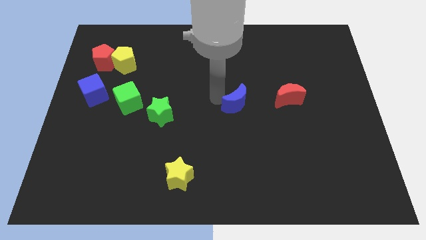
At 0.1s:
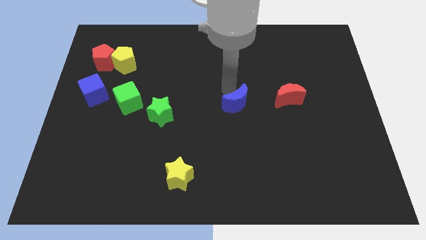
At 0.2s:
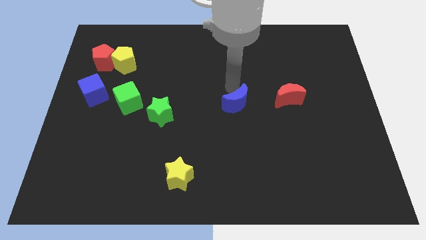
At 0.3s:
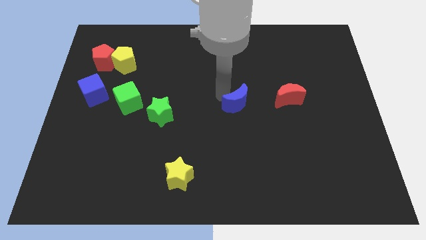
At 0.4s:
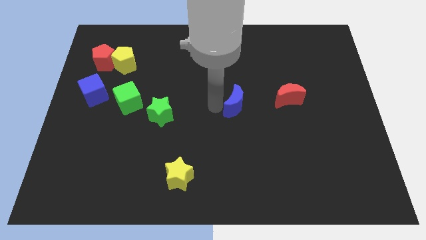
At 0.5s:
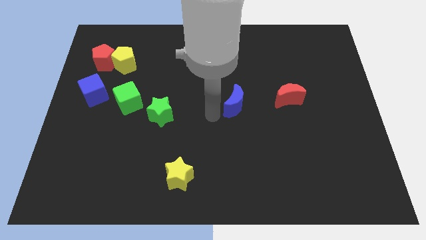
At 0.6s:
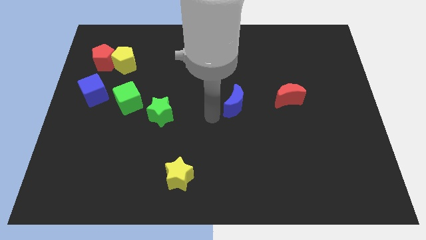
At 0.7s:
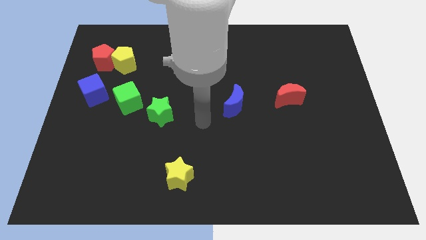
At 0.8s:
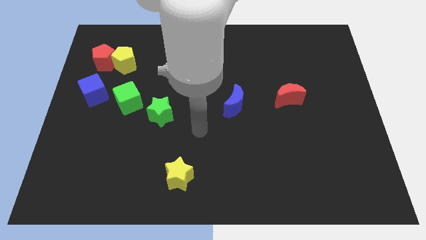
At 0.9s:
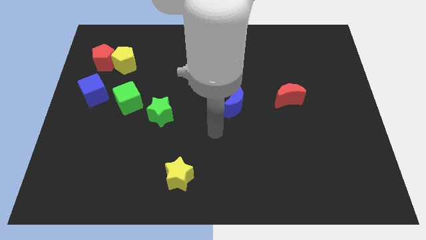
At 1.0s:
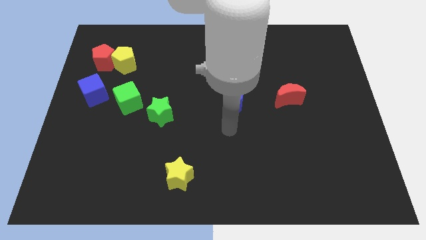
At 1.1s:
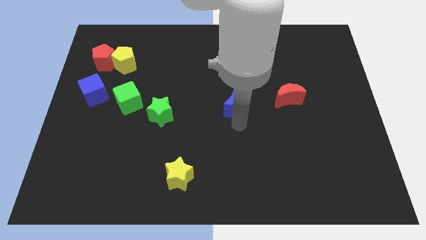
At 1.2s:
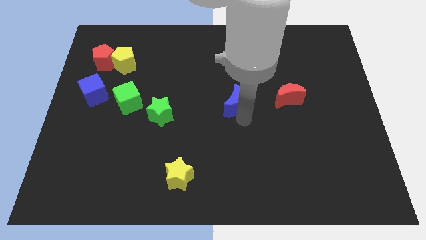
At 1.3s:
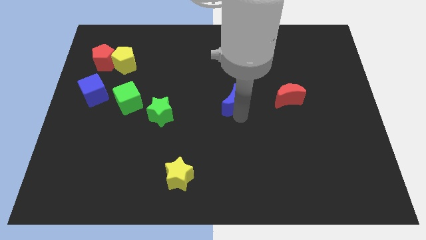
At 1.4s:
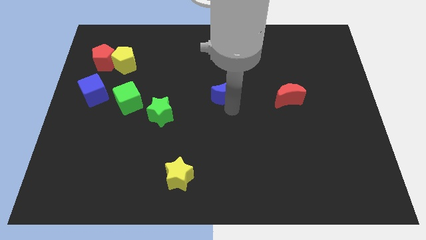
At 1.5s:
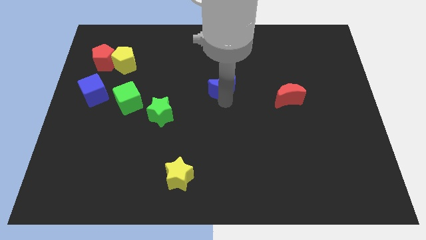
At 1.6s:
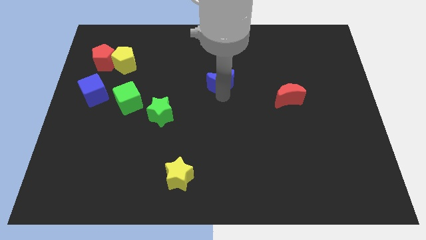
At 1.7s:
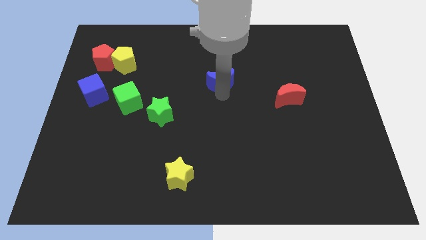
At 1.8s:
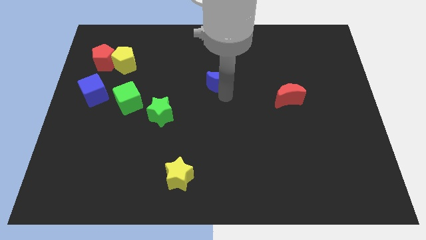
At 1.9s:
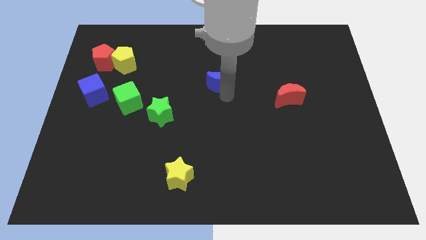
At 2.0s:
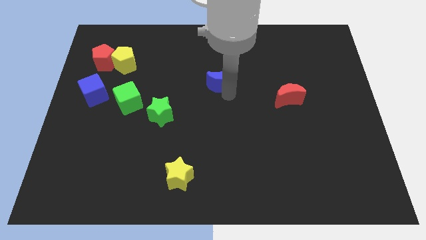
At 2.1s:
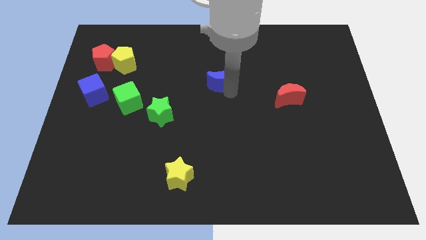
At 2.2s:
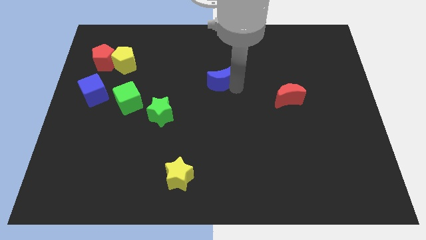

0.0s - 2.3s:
slightly move the blue moon up

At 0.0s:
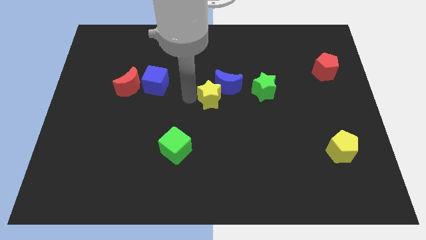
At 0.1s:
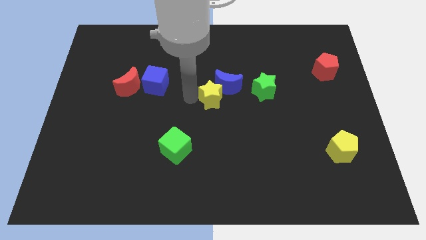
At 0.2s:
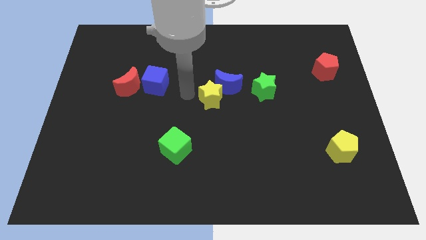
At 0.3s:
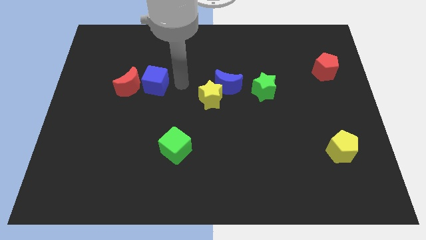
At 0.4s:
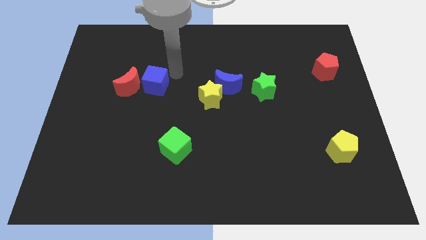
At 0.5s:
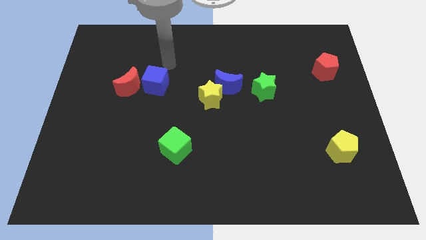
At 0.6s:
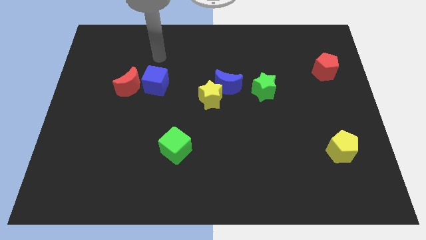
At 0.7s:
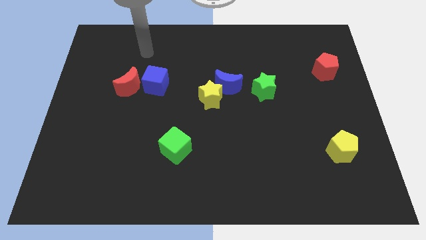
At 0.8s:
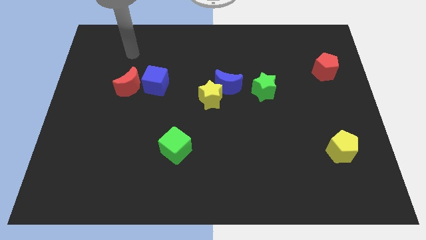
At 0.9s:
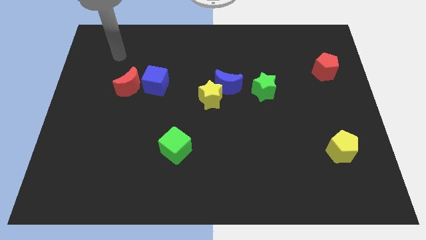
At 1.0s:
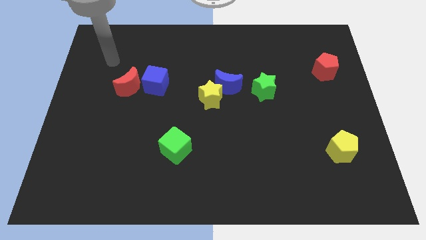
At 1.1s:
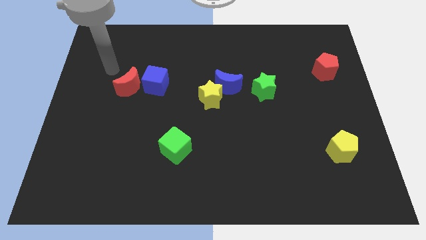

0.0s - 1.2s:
move your arm away from the yellow star

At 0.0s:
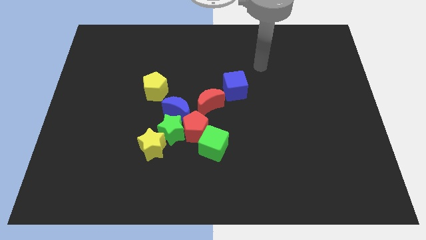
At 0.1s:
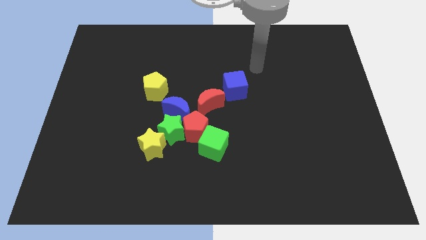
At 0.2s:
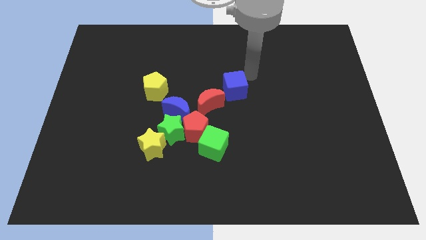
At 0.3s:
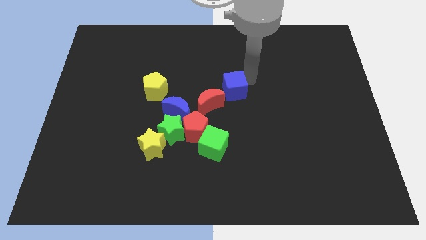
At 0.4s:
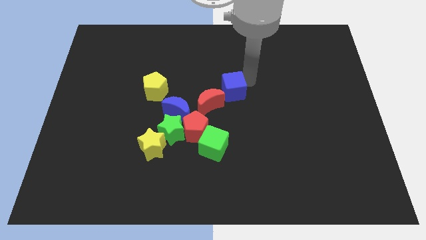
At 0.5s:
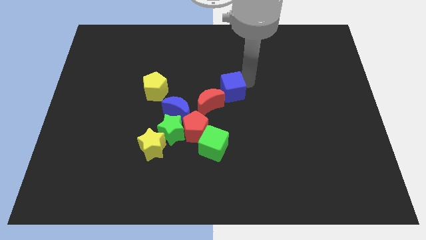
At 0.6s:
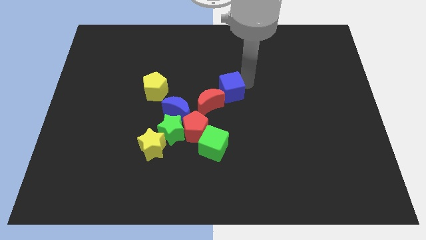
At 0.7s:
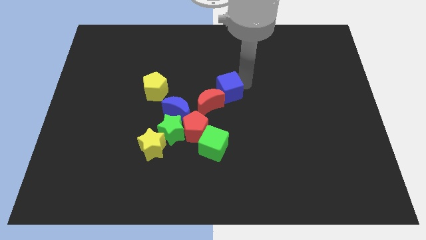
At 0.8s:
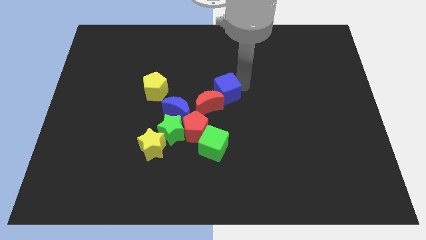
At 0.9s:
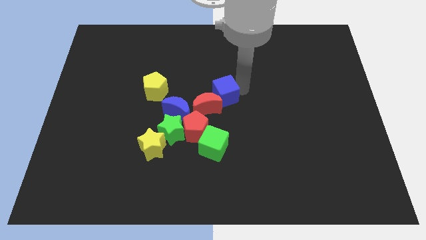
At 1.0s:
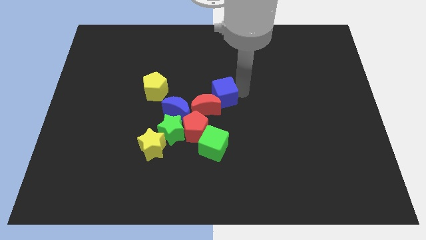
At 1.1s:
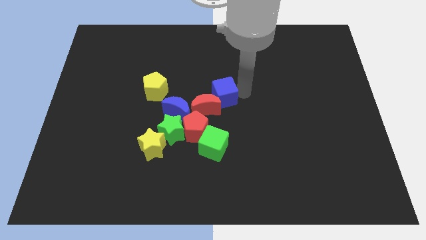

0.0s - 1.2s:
move the blue cube into the red crescent

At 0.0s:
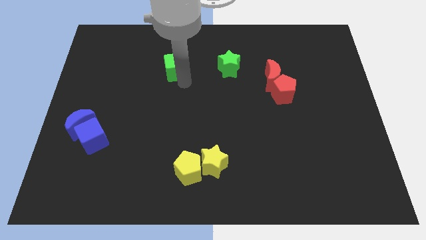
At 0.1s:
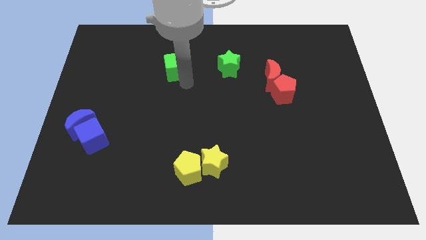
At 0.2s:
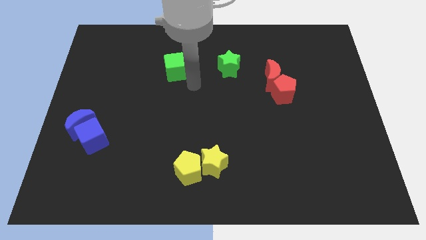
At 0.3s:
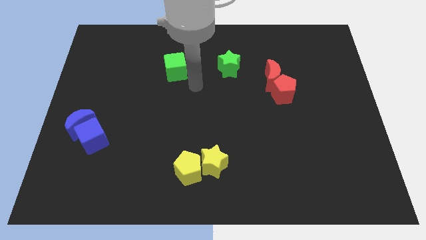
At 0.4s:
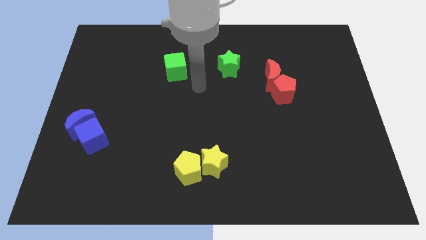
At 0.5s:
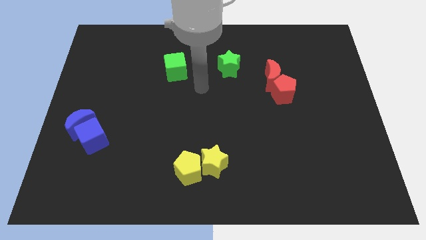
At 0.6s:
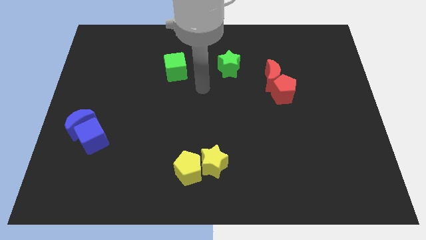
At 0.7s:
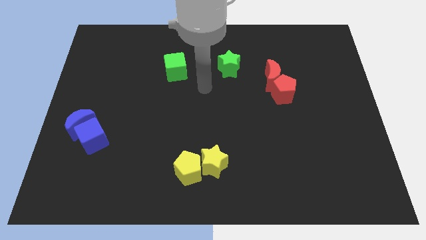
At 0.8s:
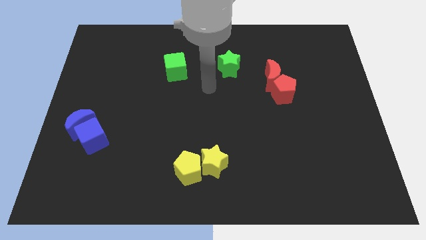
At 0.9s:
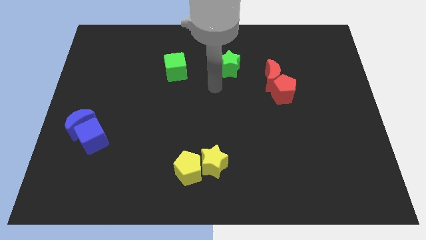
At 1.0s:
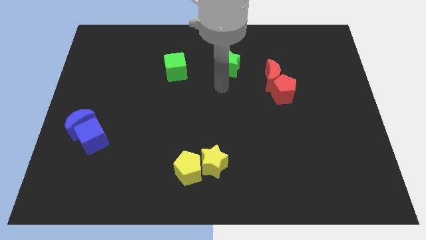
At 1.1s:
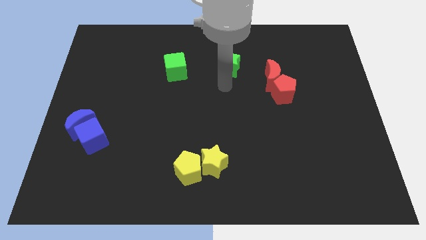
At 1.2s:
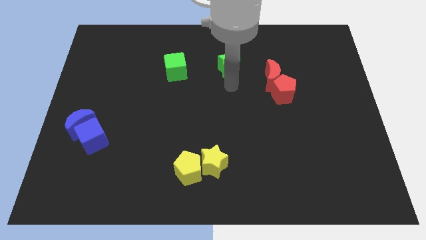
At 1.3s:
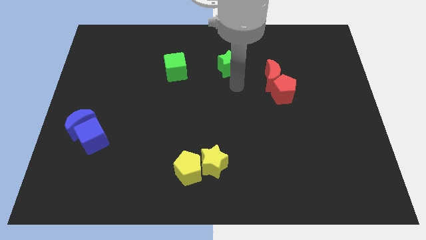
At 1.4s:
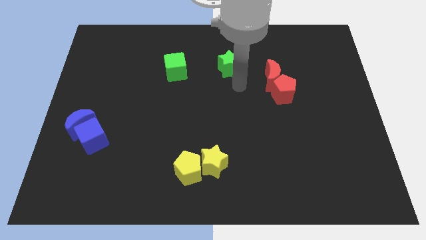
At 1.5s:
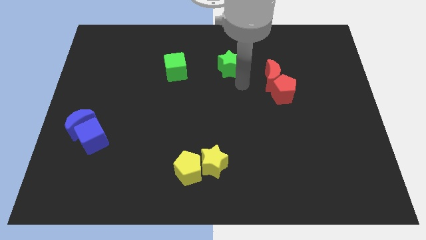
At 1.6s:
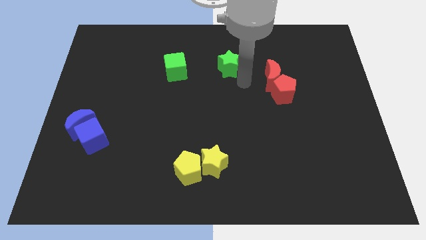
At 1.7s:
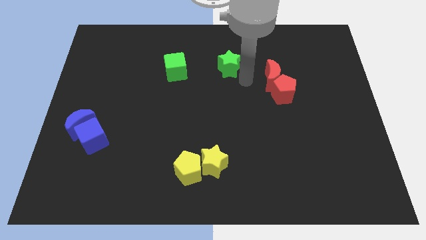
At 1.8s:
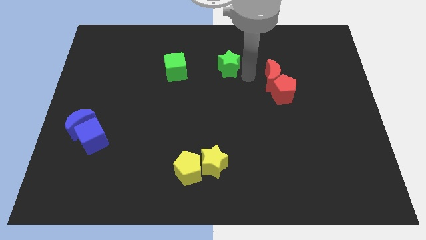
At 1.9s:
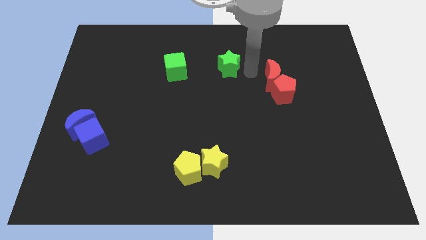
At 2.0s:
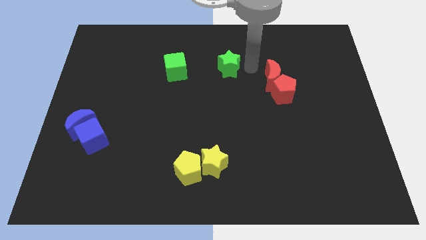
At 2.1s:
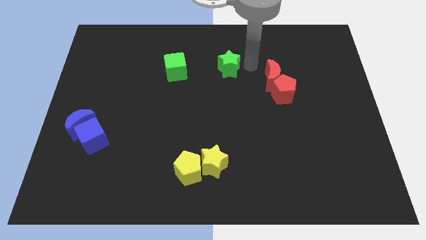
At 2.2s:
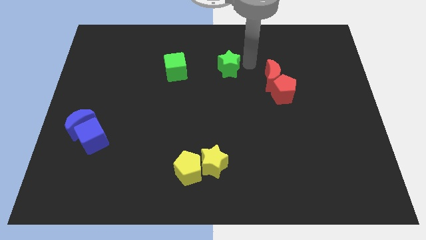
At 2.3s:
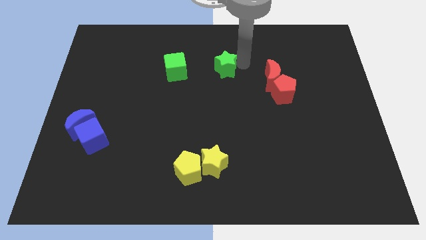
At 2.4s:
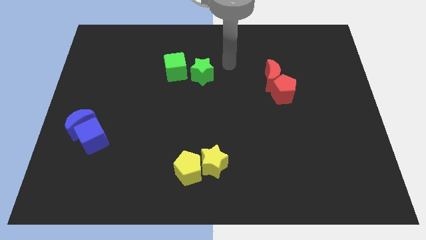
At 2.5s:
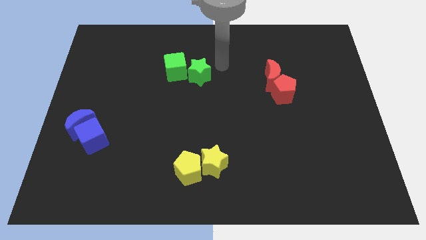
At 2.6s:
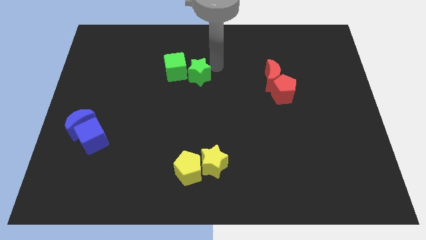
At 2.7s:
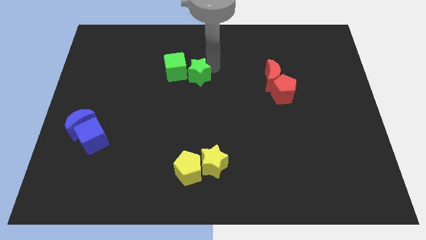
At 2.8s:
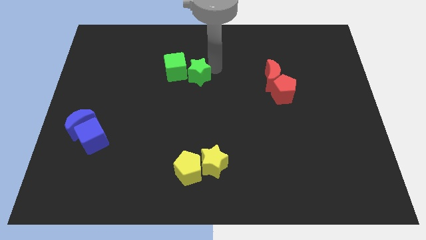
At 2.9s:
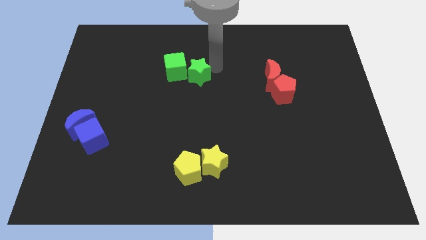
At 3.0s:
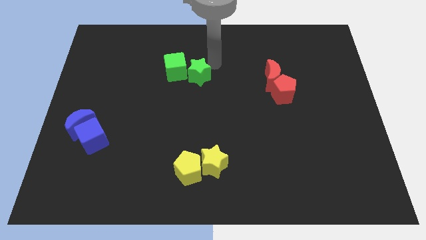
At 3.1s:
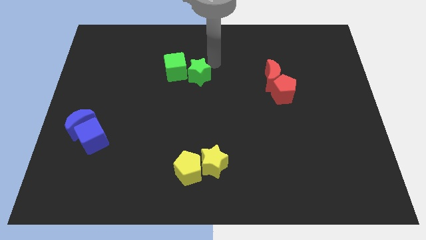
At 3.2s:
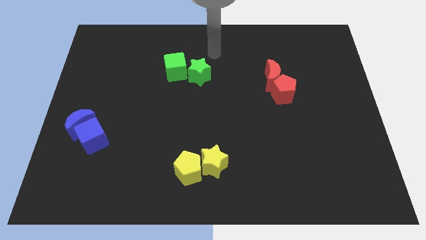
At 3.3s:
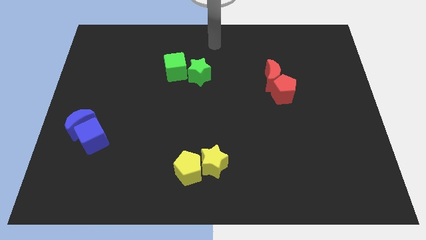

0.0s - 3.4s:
push the green star into the green cube

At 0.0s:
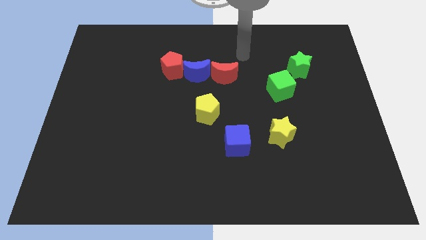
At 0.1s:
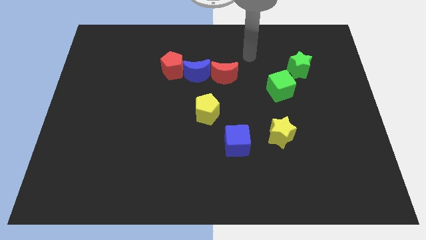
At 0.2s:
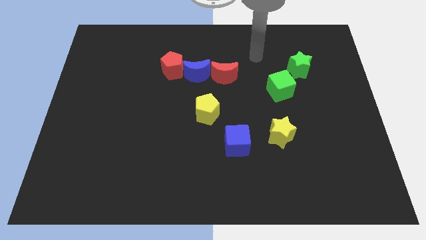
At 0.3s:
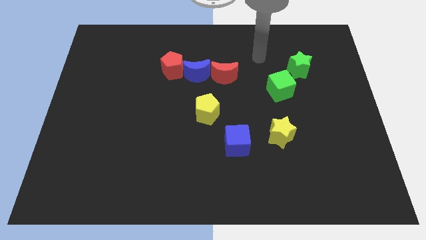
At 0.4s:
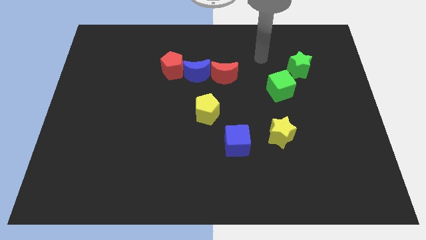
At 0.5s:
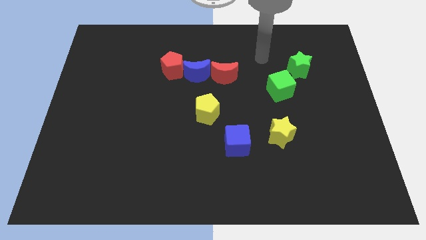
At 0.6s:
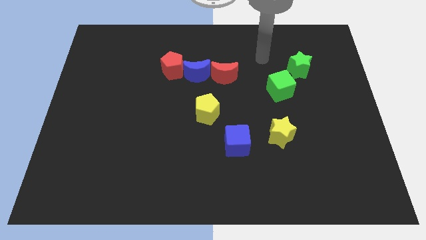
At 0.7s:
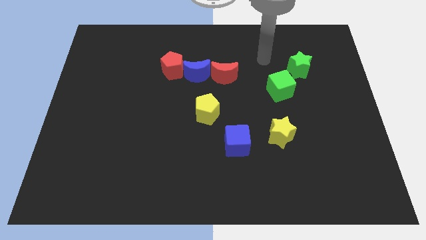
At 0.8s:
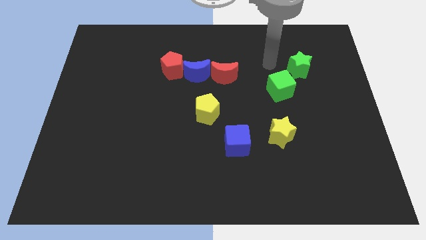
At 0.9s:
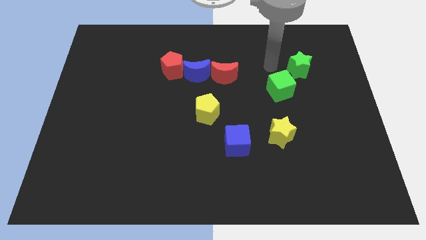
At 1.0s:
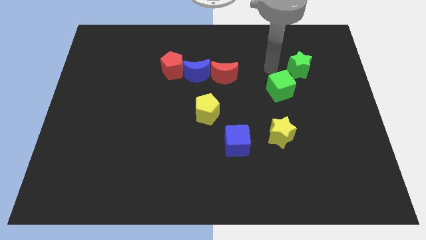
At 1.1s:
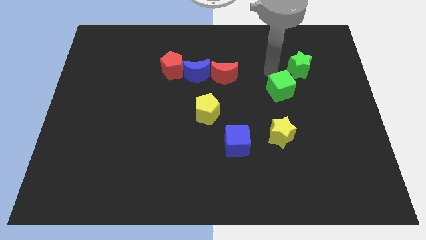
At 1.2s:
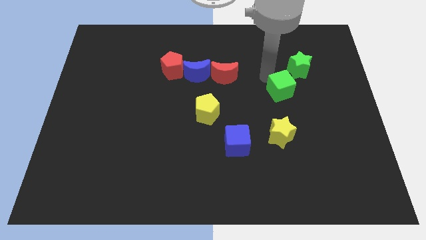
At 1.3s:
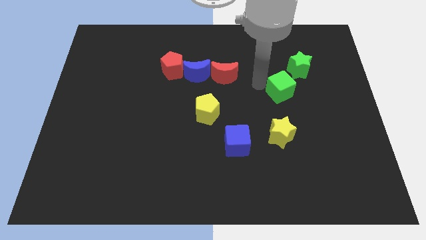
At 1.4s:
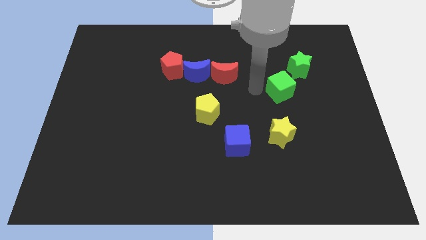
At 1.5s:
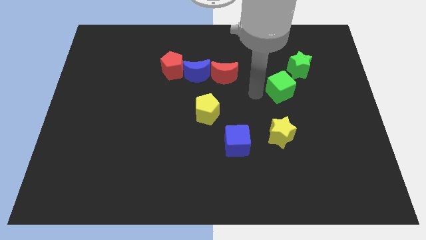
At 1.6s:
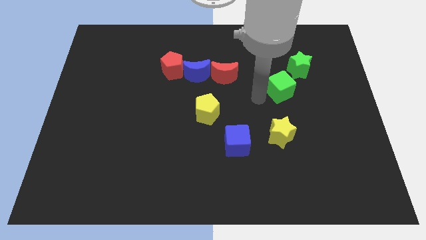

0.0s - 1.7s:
place the arm left to the green cube
